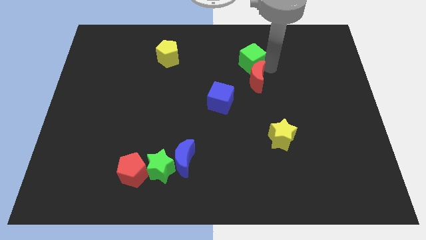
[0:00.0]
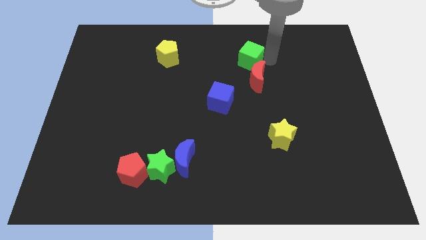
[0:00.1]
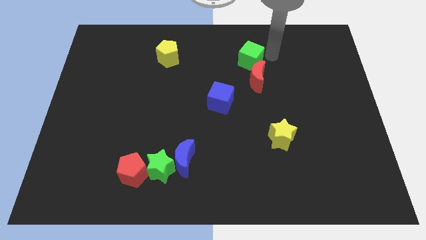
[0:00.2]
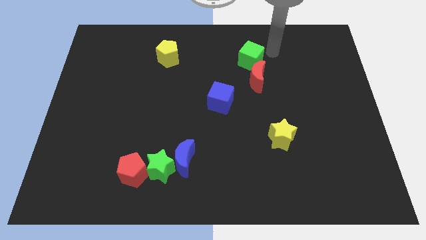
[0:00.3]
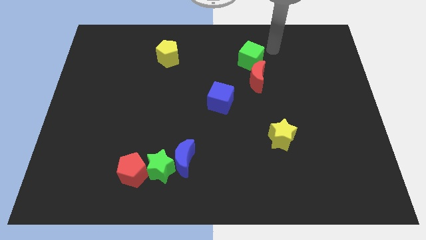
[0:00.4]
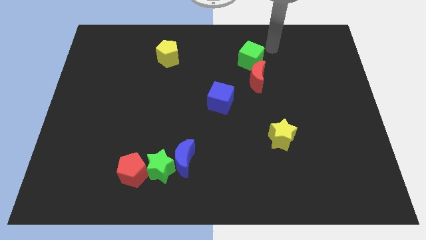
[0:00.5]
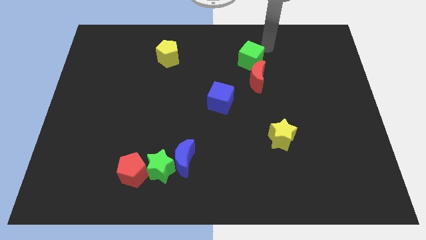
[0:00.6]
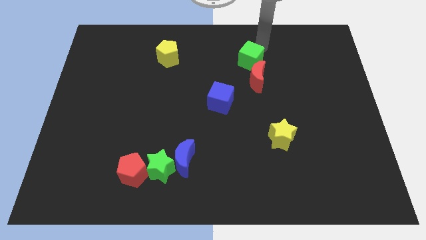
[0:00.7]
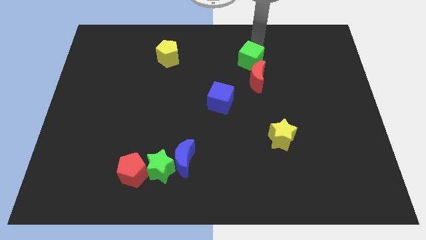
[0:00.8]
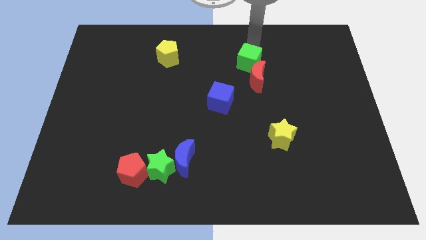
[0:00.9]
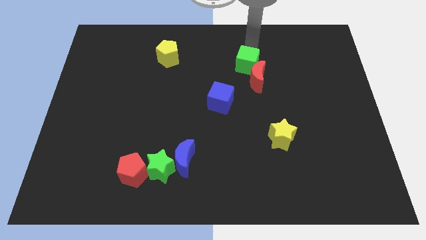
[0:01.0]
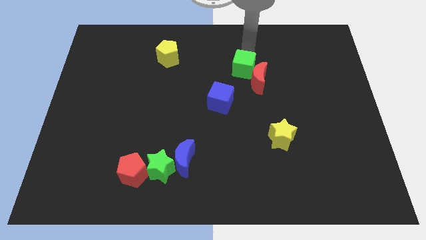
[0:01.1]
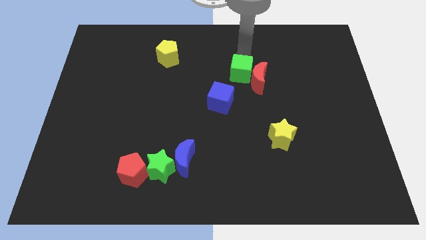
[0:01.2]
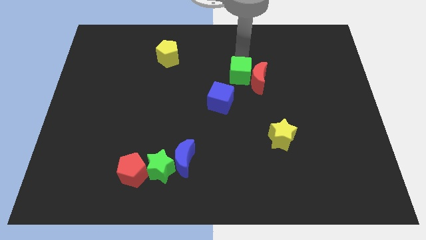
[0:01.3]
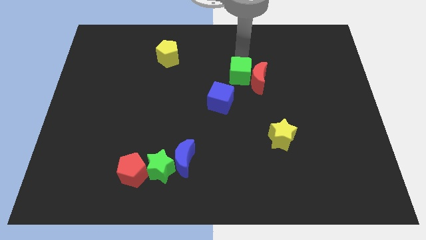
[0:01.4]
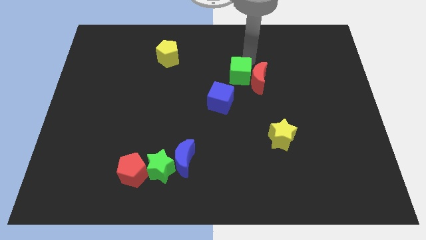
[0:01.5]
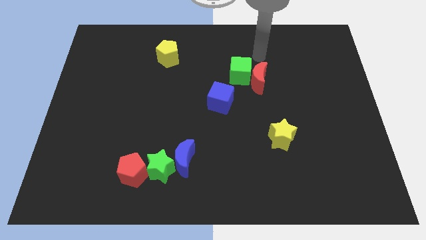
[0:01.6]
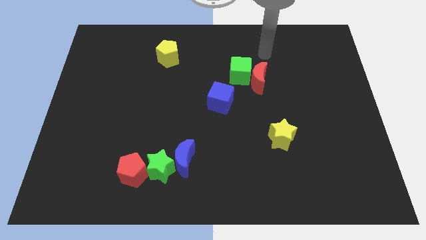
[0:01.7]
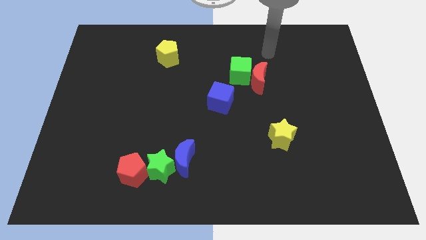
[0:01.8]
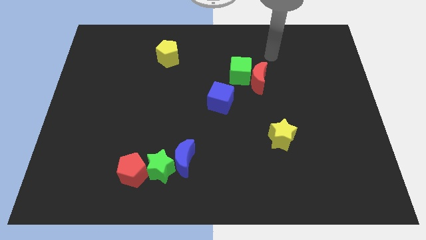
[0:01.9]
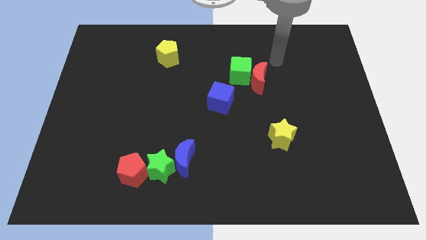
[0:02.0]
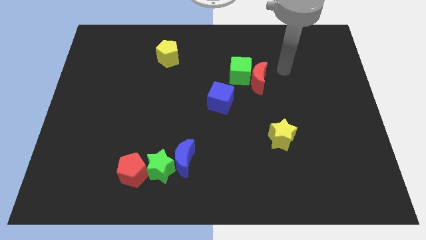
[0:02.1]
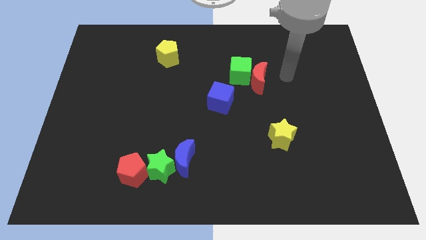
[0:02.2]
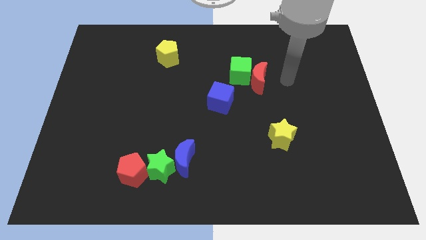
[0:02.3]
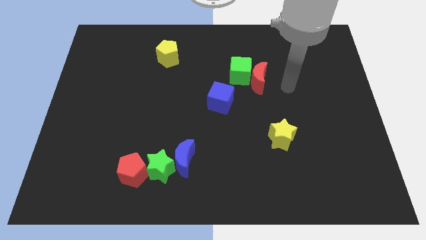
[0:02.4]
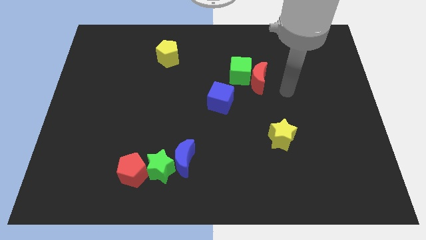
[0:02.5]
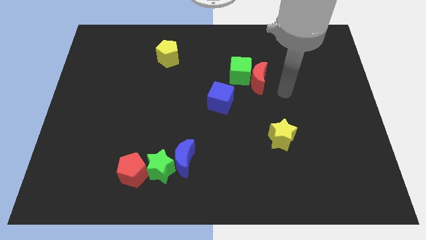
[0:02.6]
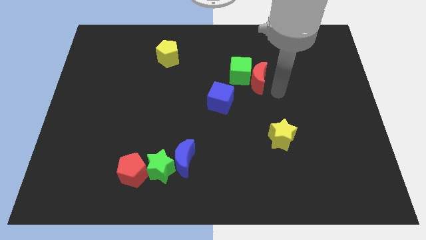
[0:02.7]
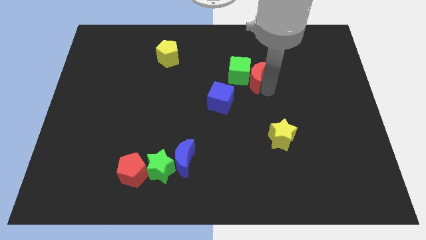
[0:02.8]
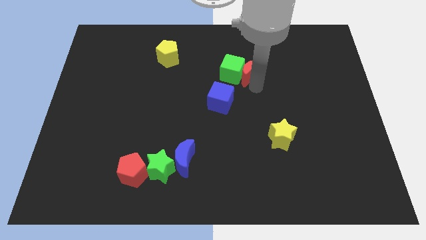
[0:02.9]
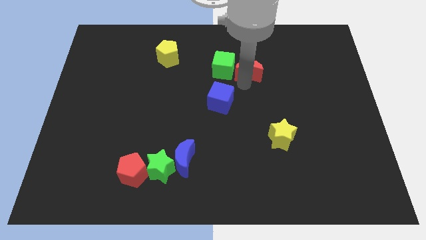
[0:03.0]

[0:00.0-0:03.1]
push the green cube slightly down

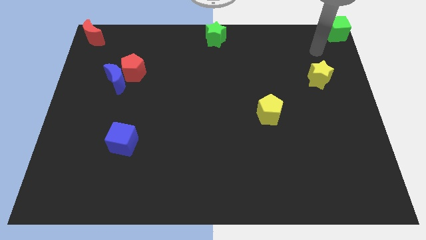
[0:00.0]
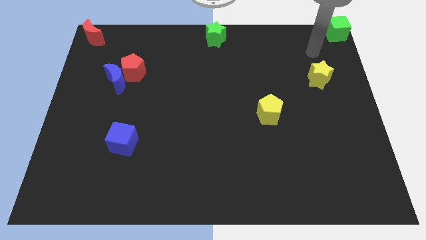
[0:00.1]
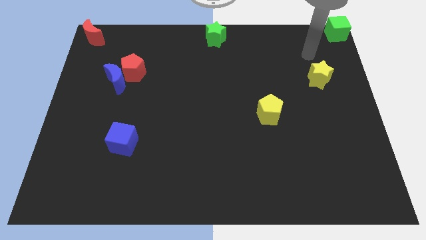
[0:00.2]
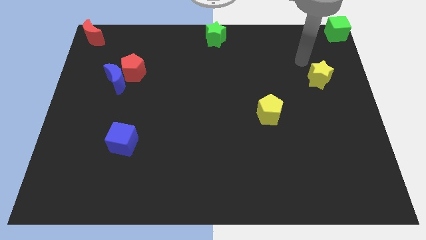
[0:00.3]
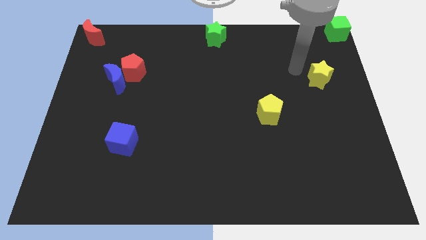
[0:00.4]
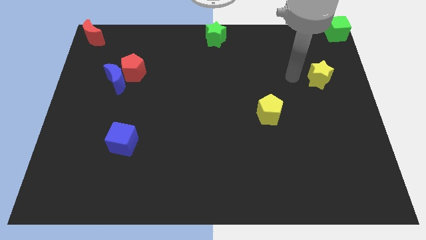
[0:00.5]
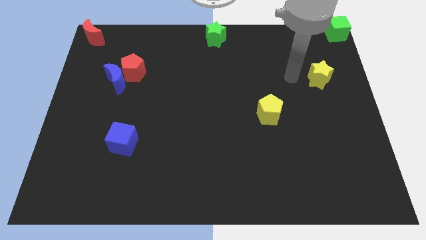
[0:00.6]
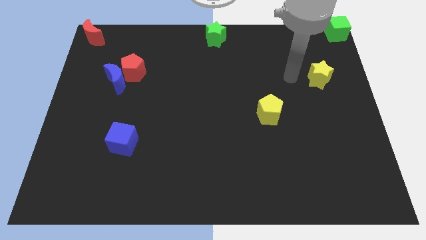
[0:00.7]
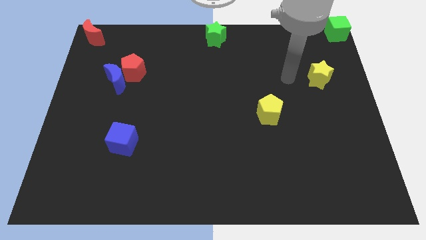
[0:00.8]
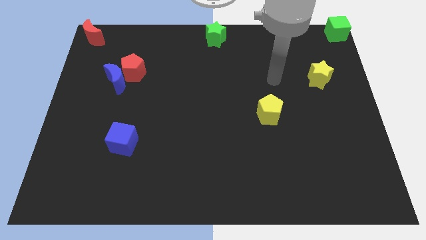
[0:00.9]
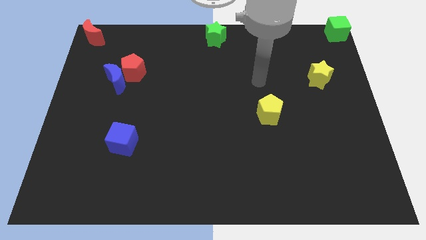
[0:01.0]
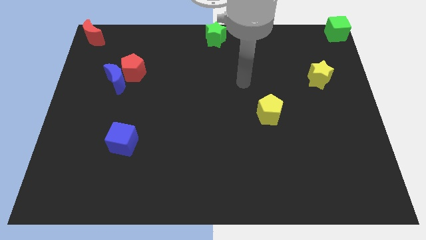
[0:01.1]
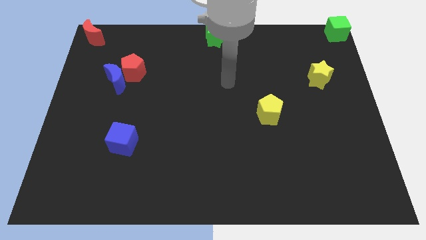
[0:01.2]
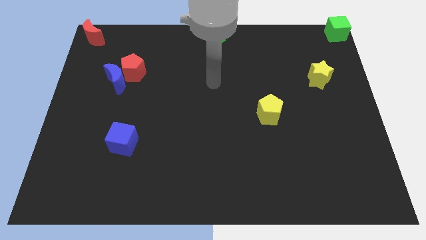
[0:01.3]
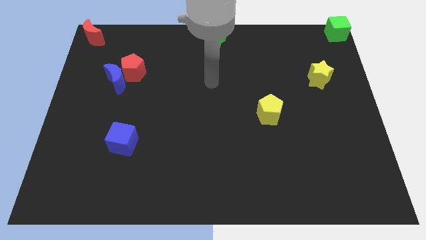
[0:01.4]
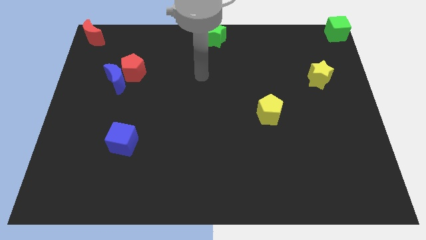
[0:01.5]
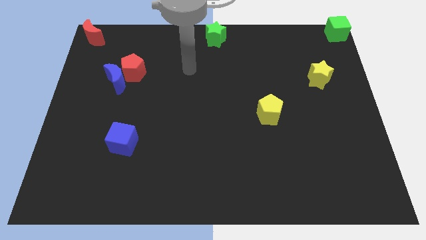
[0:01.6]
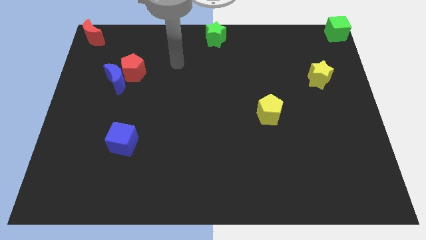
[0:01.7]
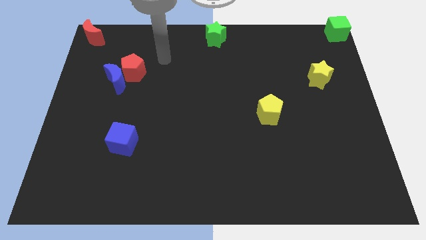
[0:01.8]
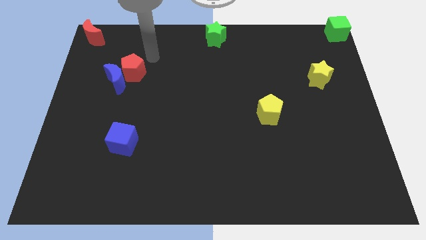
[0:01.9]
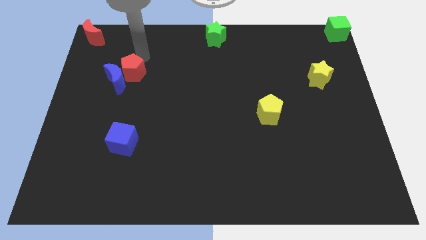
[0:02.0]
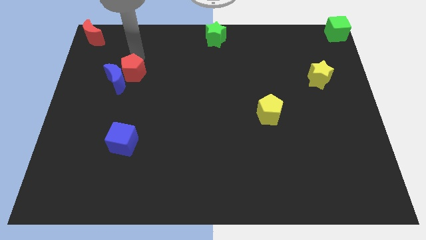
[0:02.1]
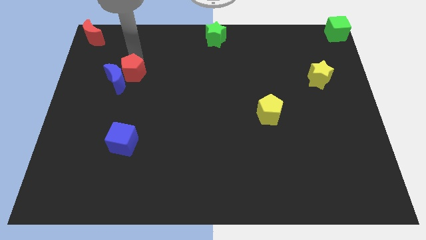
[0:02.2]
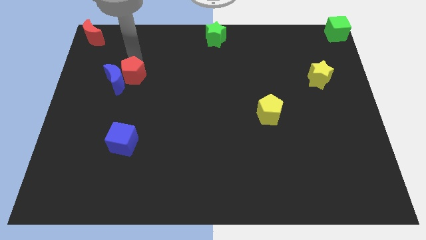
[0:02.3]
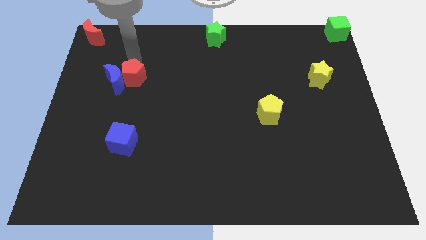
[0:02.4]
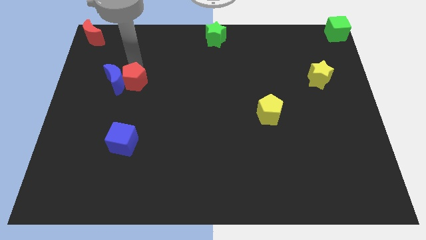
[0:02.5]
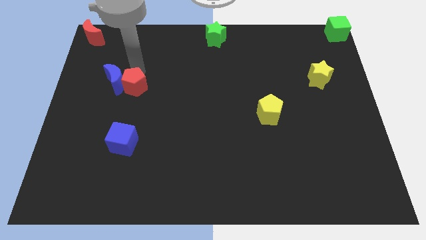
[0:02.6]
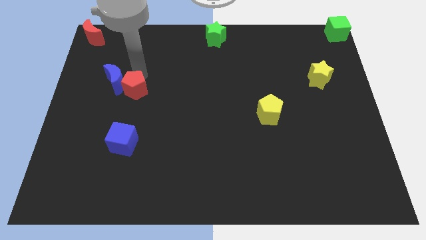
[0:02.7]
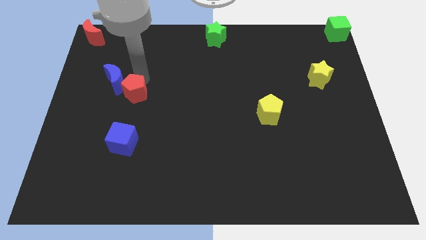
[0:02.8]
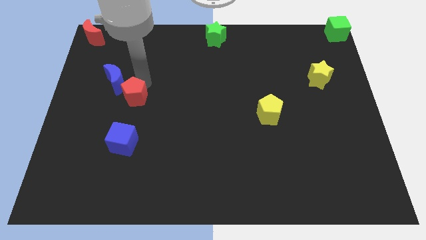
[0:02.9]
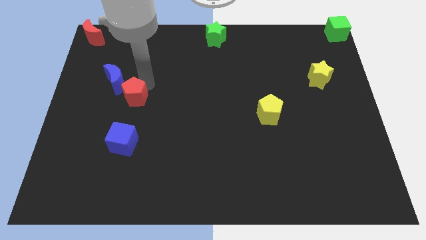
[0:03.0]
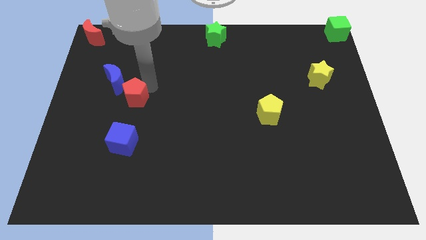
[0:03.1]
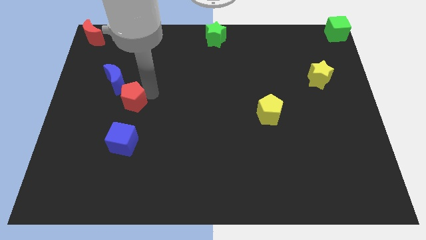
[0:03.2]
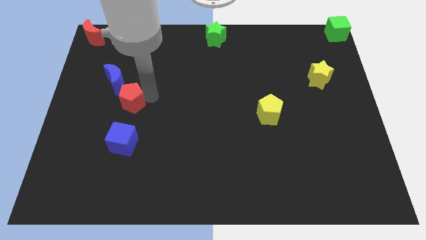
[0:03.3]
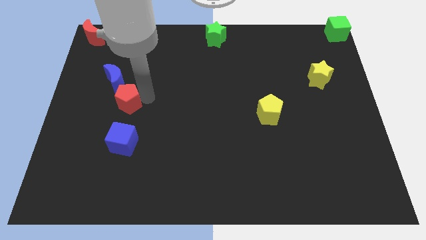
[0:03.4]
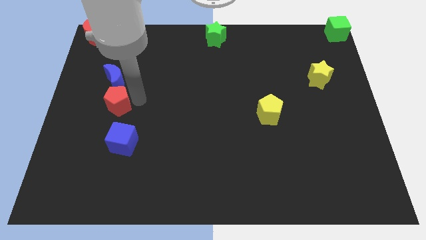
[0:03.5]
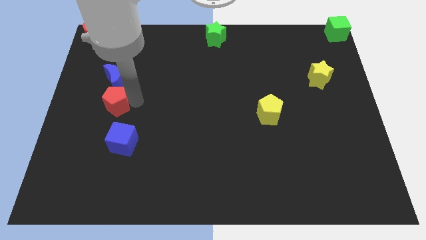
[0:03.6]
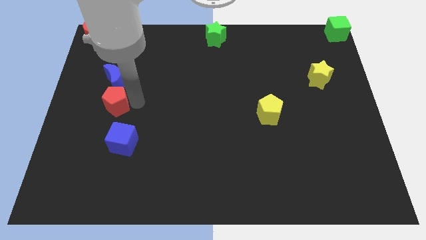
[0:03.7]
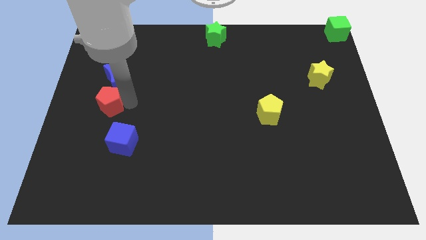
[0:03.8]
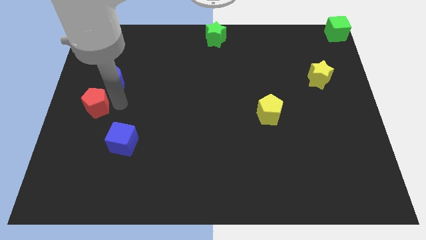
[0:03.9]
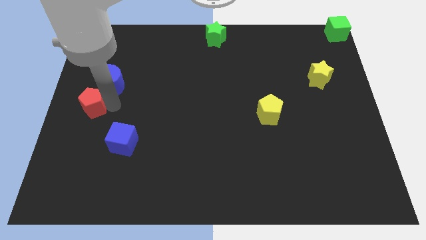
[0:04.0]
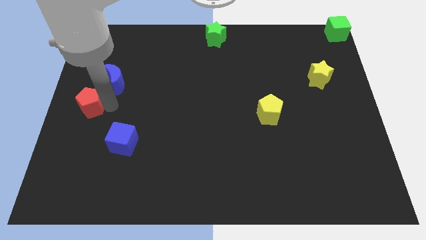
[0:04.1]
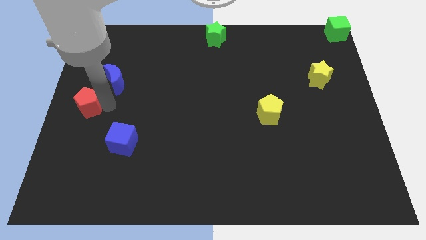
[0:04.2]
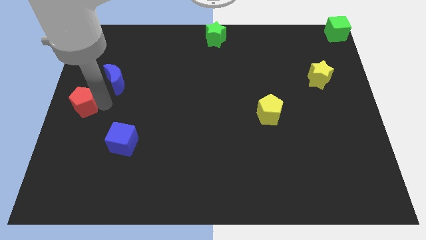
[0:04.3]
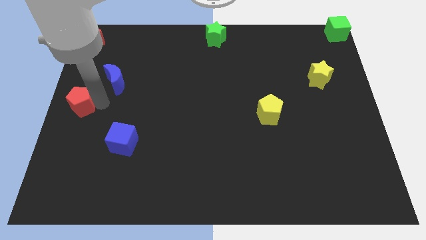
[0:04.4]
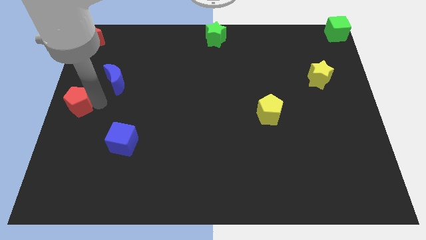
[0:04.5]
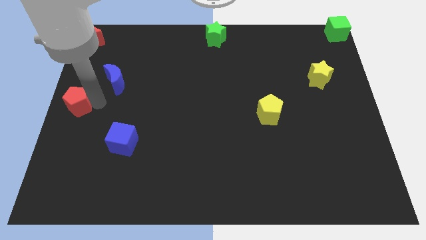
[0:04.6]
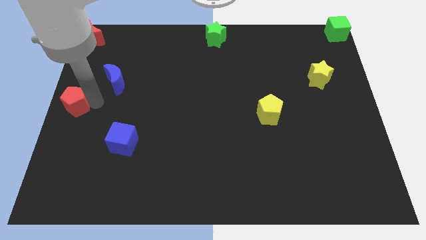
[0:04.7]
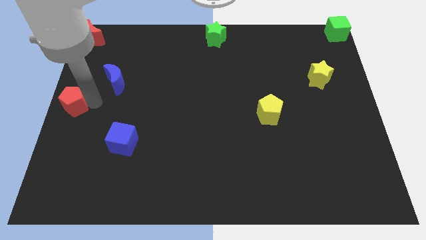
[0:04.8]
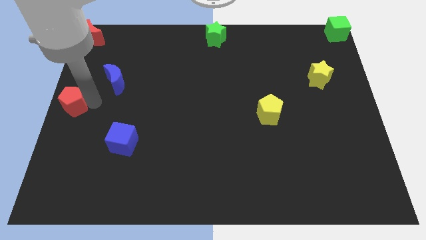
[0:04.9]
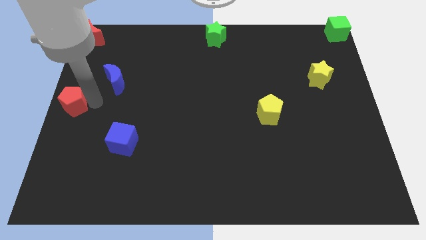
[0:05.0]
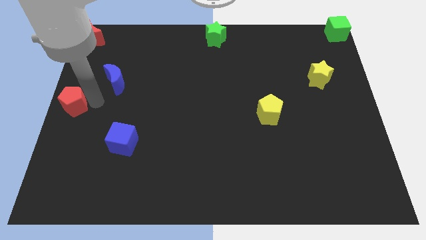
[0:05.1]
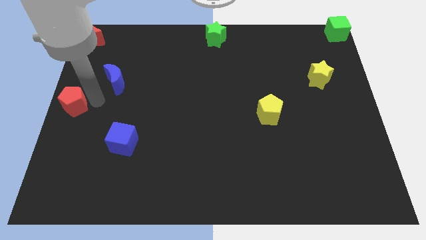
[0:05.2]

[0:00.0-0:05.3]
move the red pentagon to the left center of the board

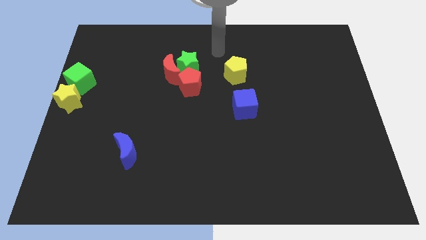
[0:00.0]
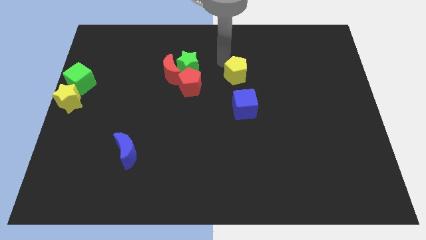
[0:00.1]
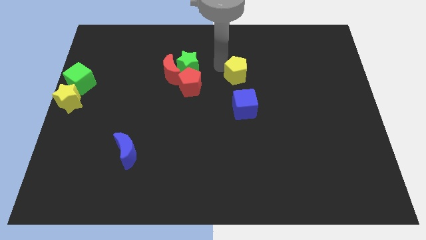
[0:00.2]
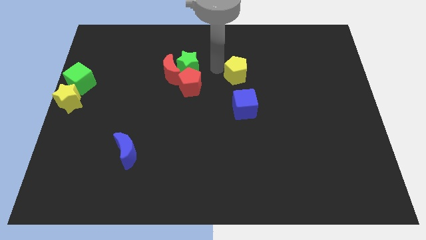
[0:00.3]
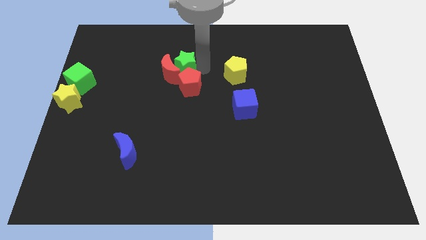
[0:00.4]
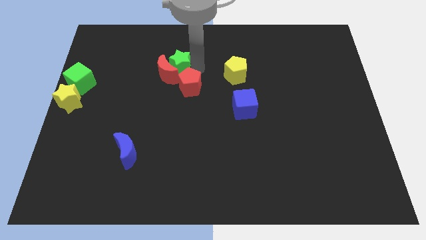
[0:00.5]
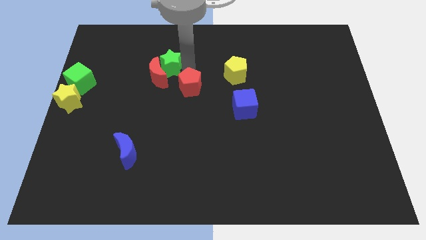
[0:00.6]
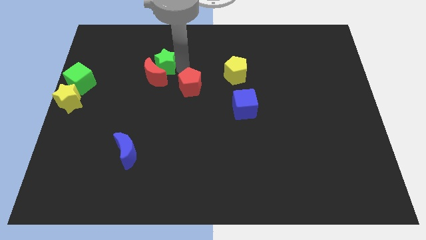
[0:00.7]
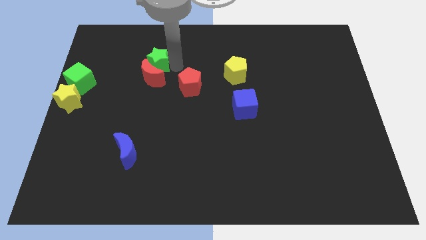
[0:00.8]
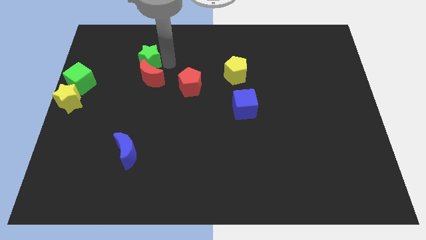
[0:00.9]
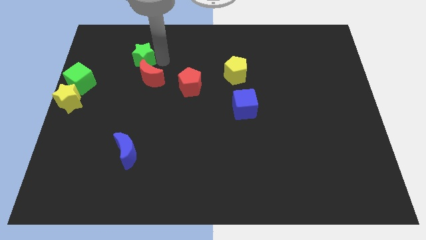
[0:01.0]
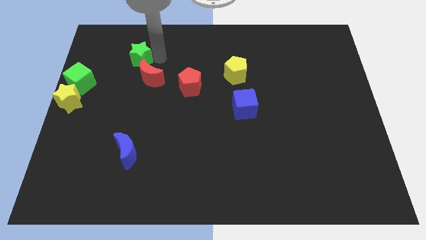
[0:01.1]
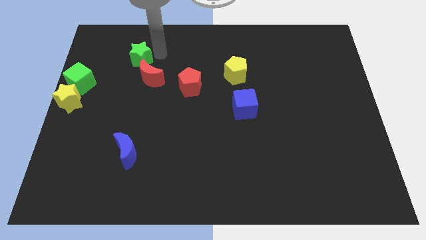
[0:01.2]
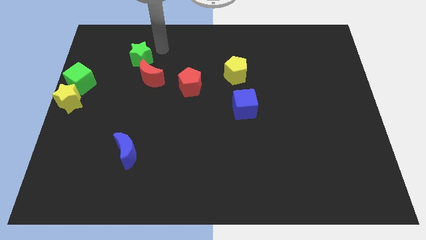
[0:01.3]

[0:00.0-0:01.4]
slightly push the green star along with red crescent
